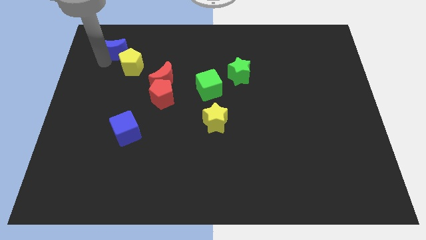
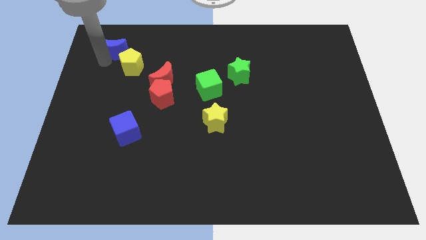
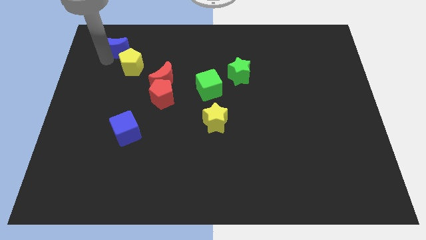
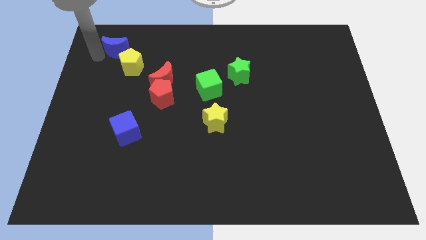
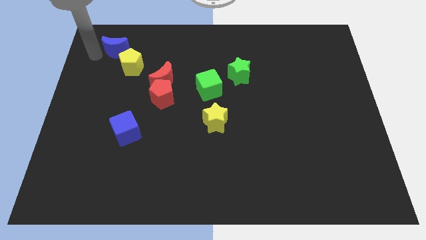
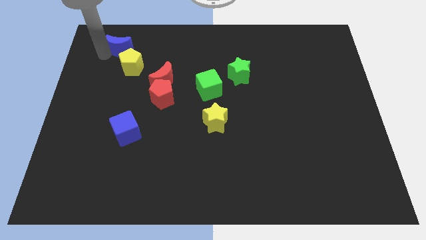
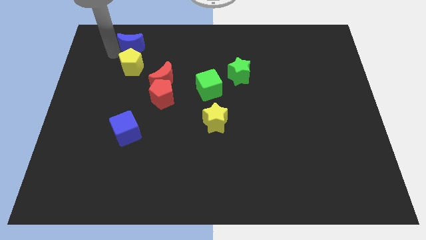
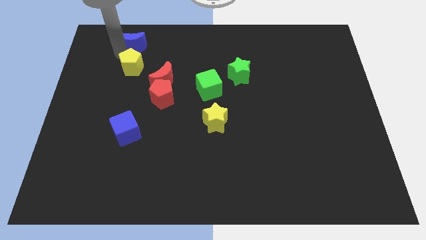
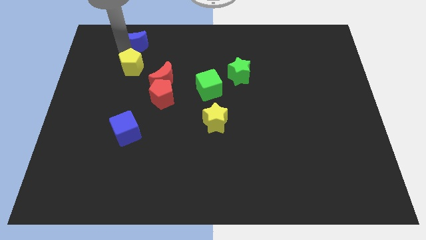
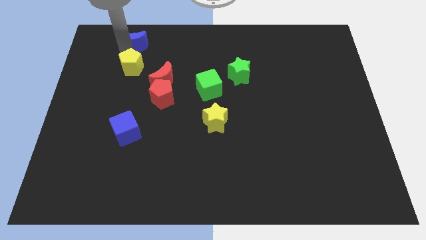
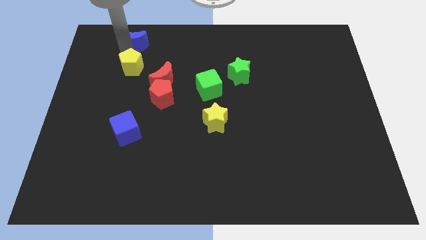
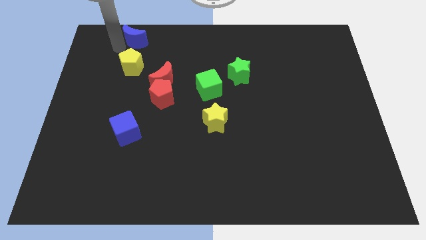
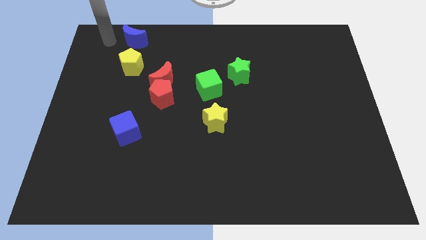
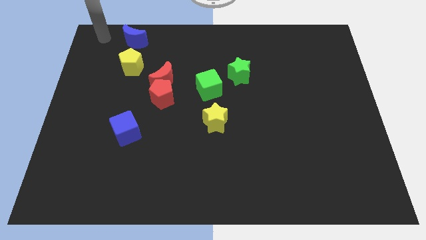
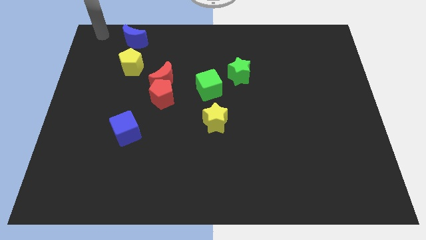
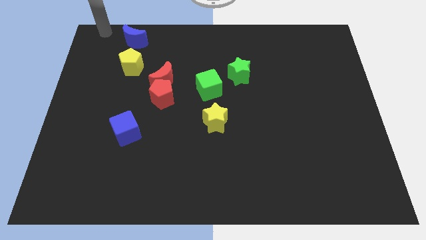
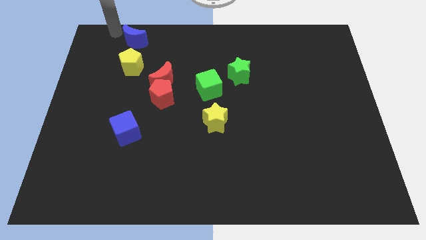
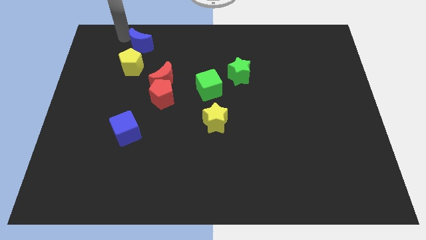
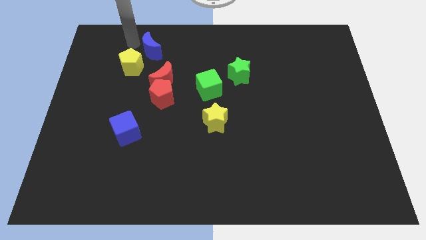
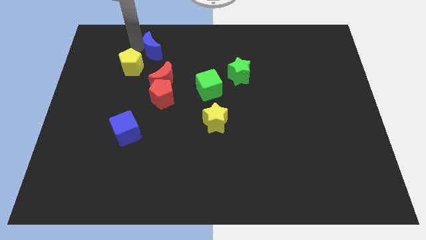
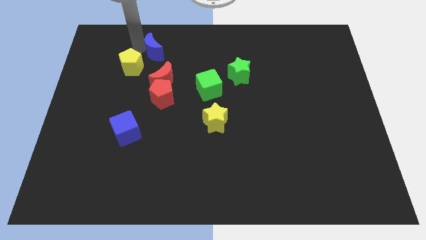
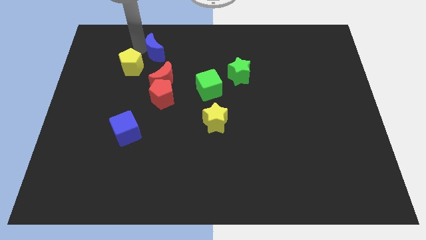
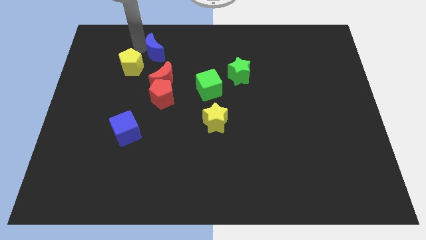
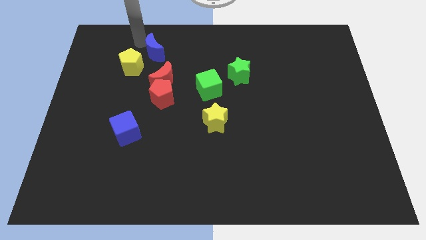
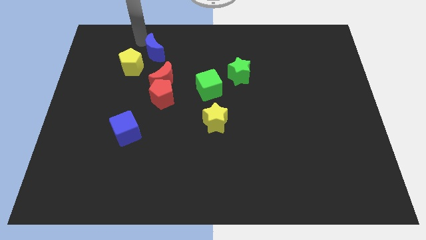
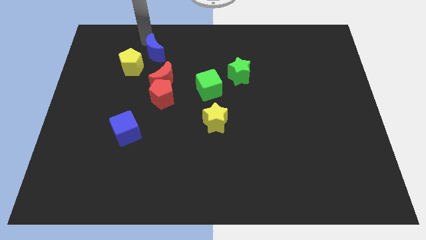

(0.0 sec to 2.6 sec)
push the blue crescent to the top right of the yellow pentagon

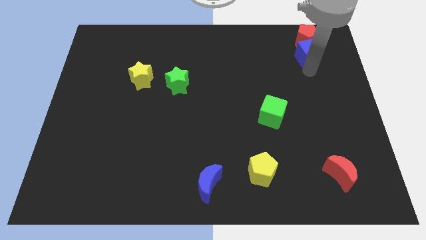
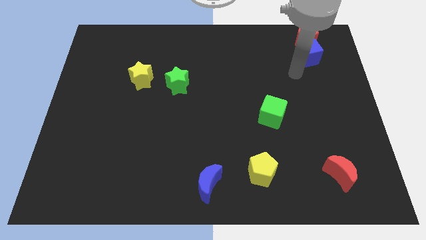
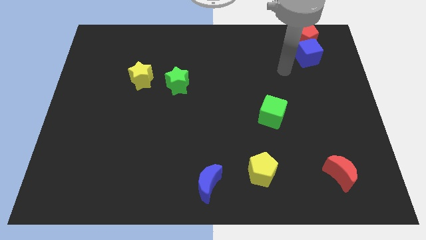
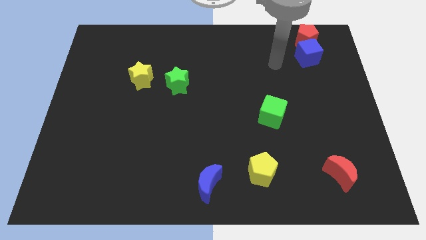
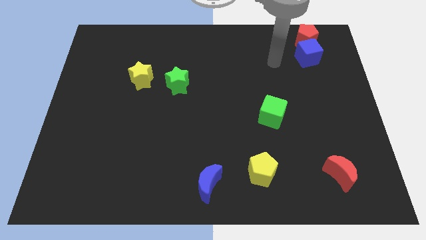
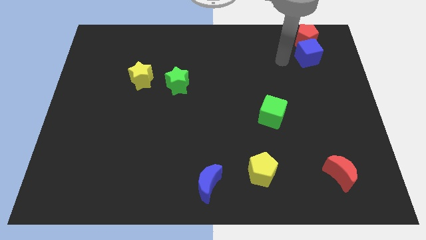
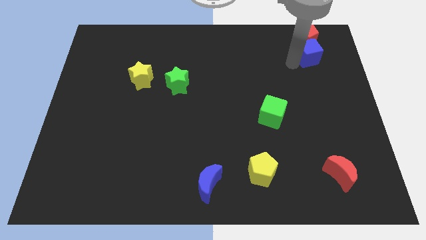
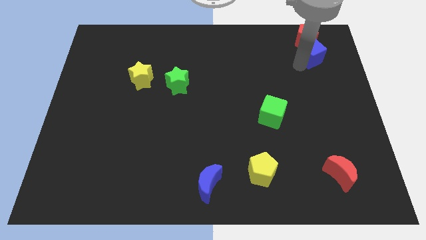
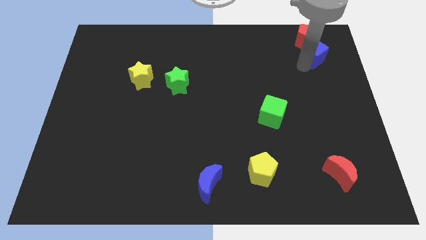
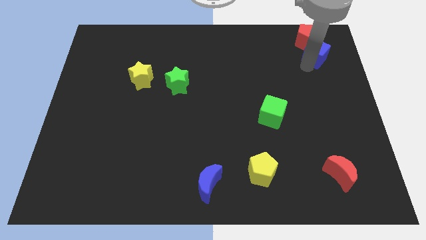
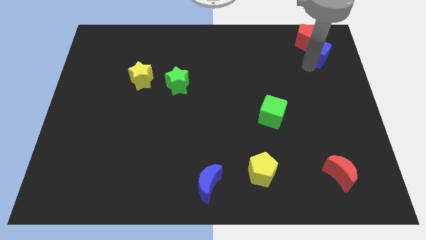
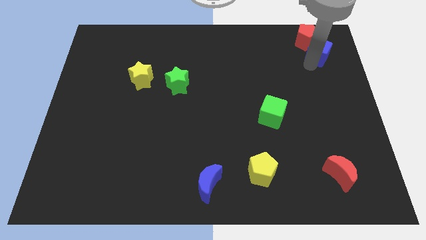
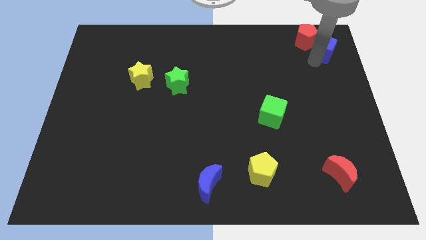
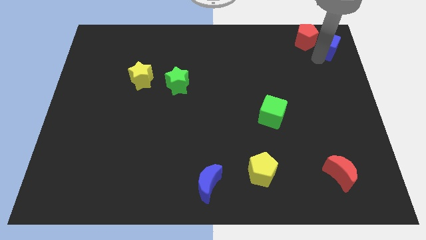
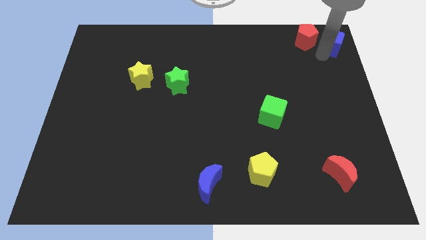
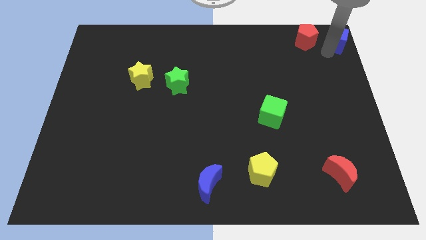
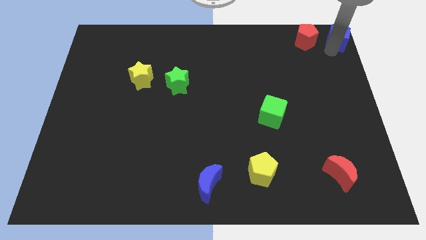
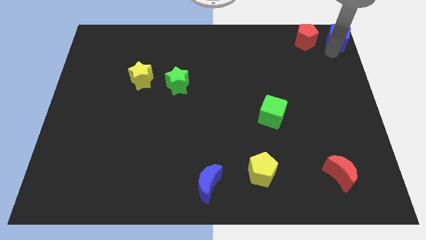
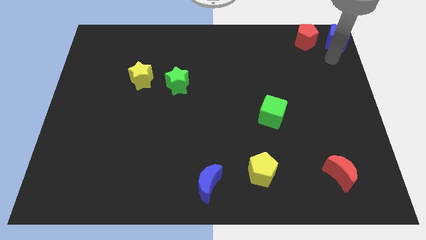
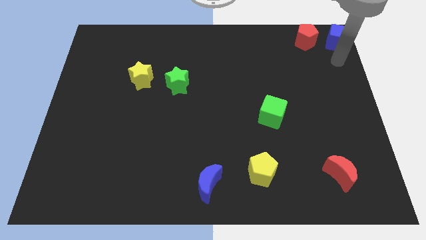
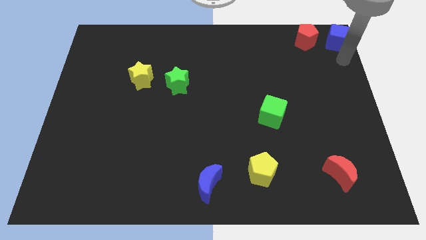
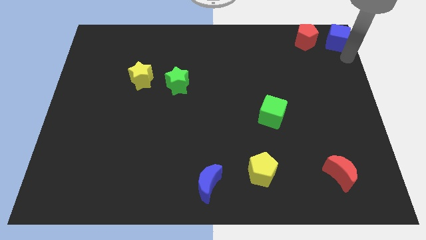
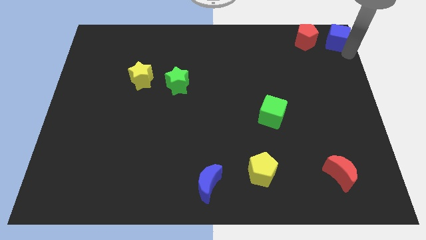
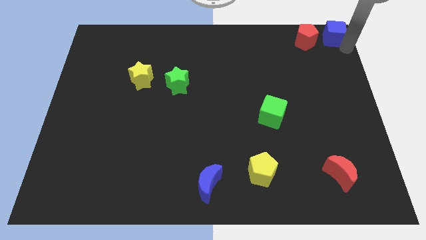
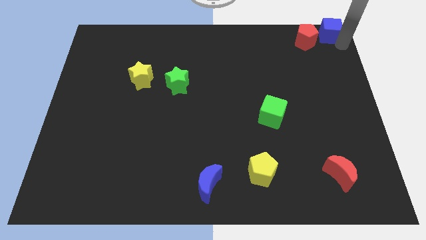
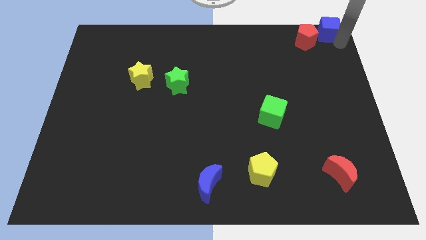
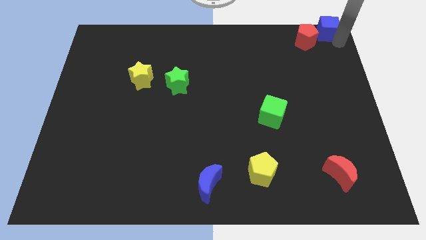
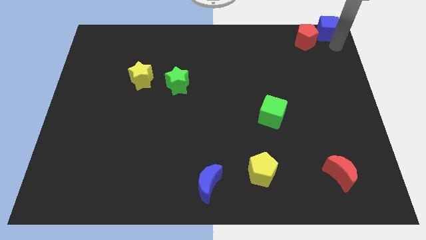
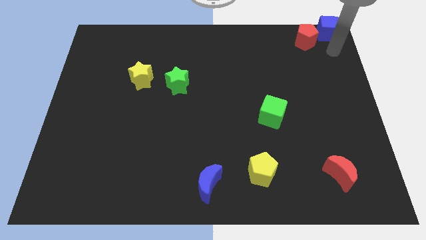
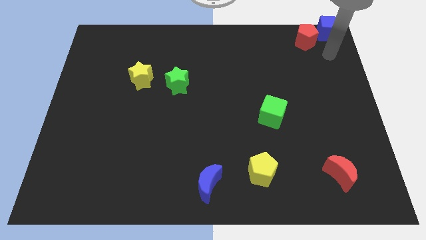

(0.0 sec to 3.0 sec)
move the blue cube to the top right corner

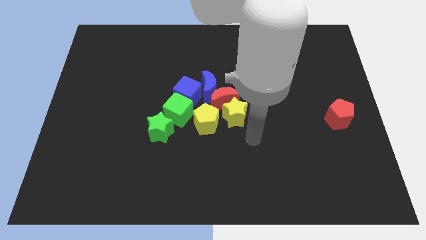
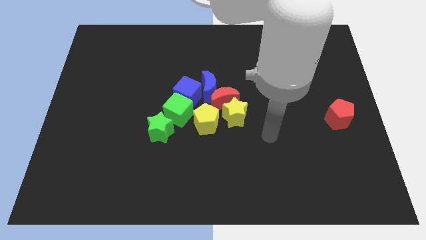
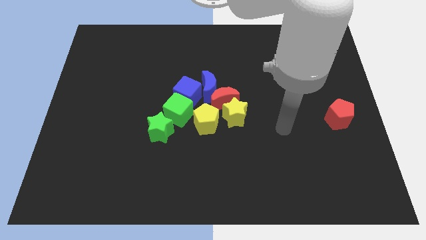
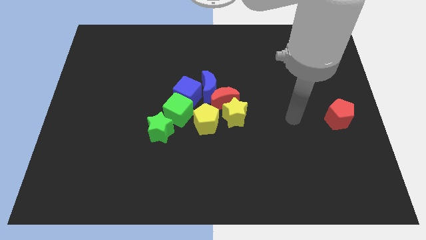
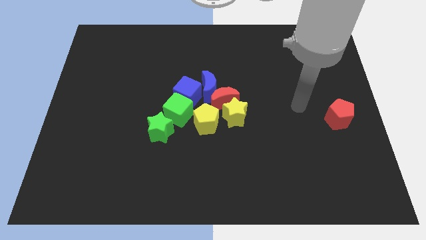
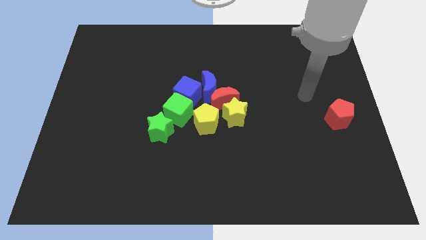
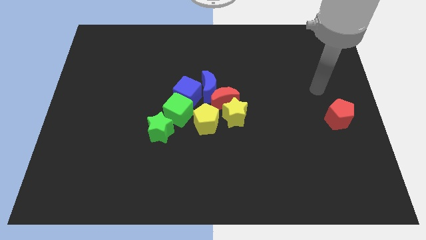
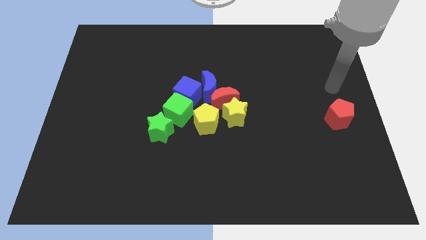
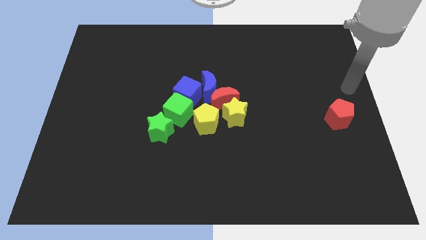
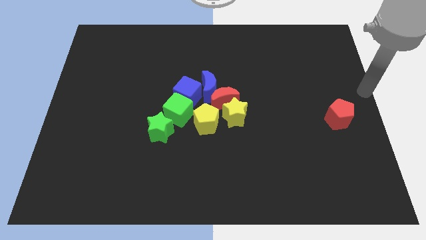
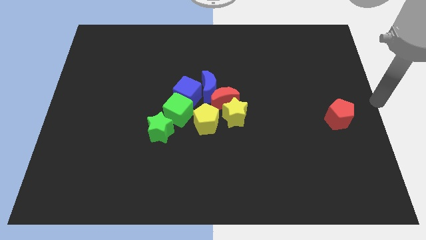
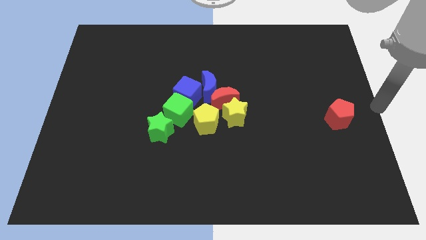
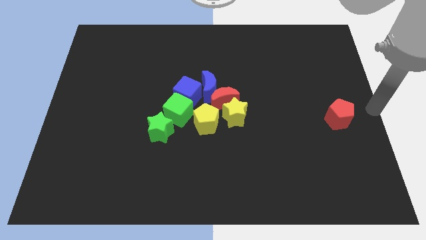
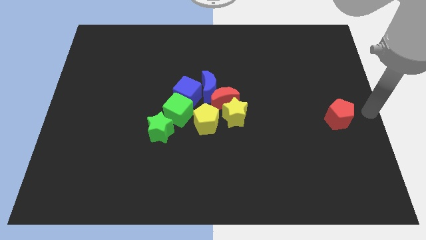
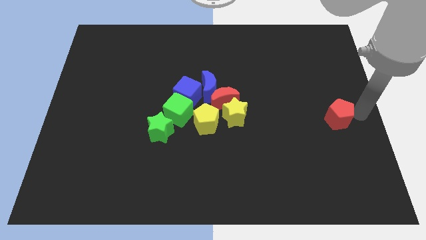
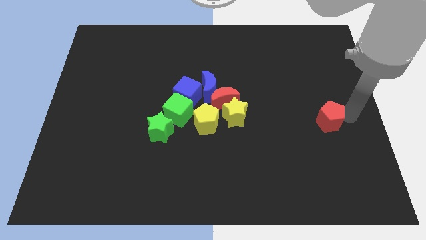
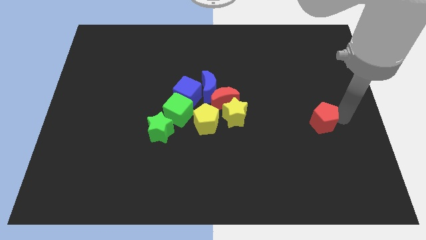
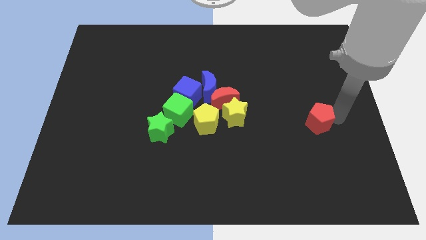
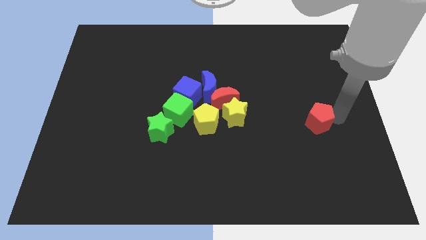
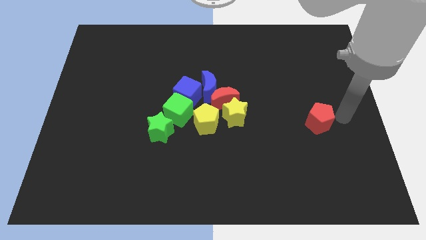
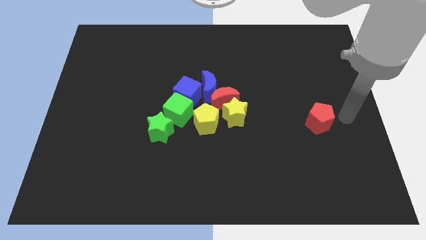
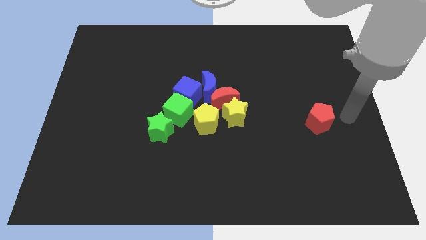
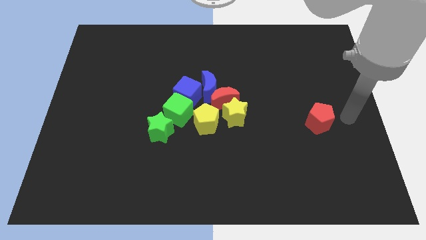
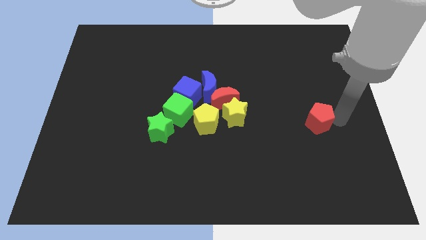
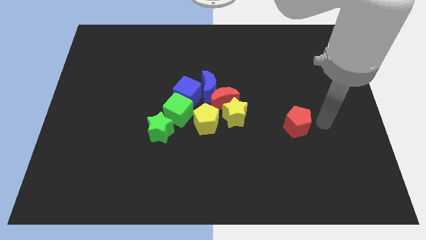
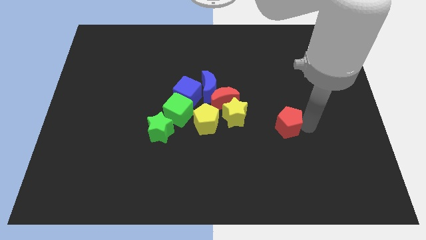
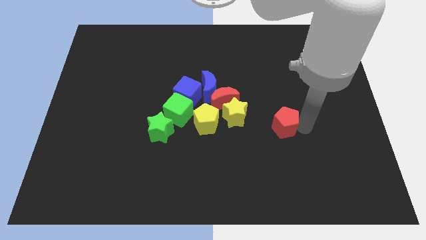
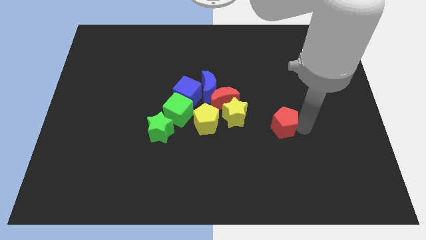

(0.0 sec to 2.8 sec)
push red pentagon slightly towards left

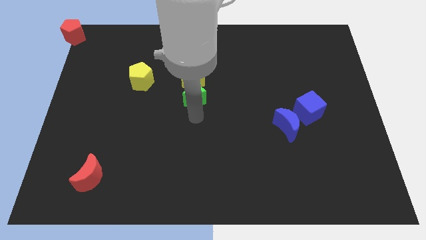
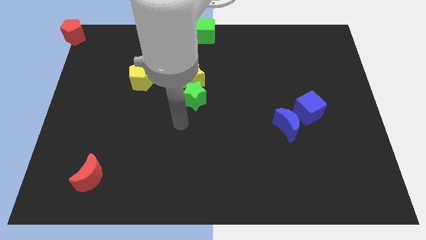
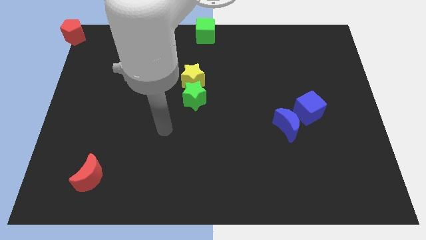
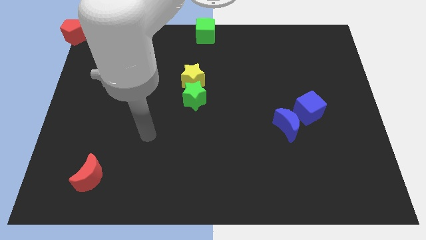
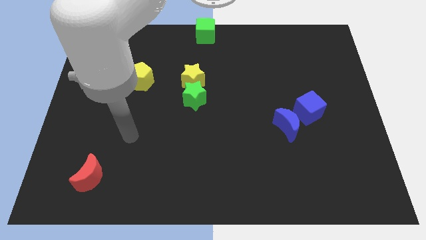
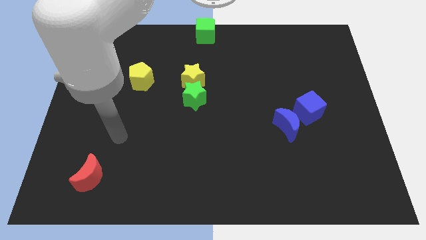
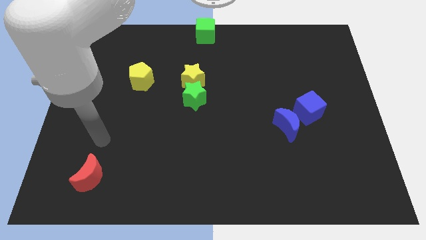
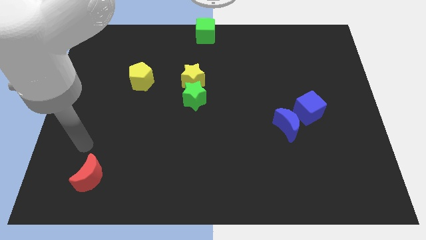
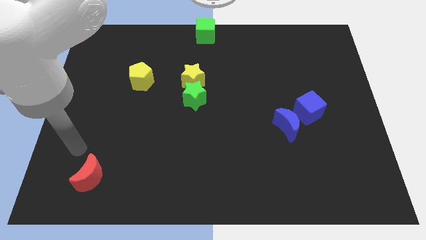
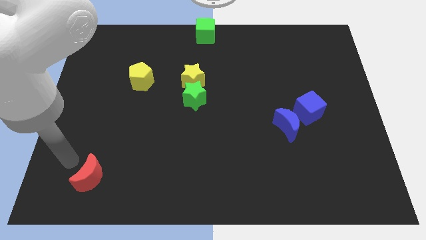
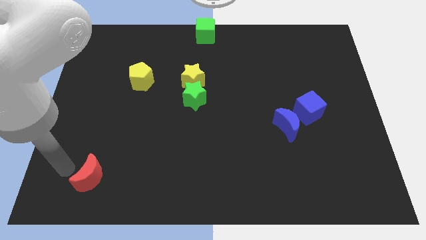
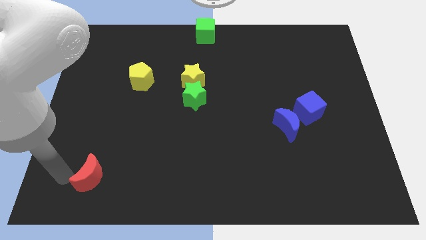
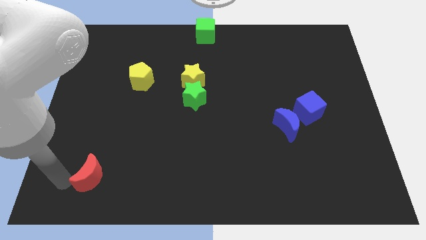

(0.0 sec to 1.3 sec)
point the arm to the left of the red moon
